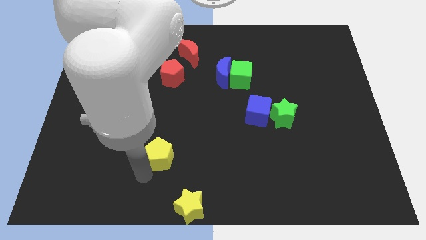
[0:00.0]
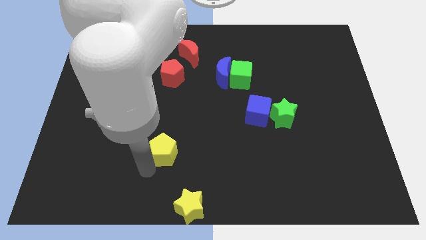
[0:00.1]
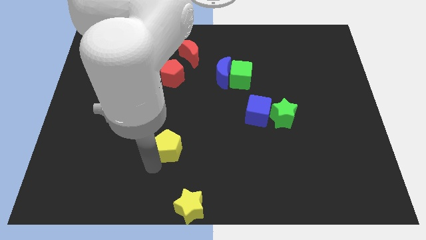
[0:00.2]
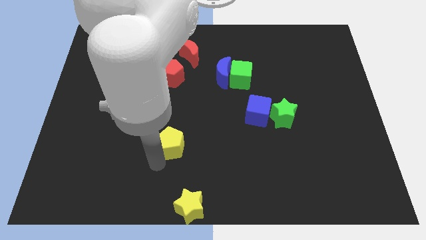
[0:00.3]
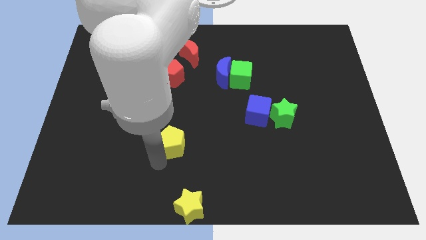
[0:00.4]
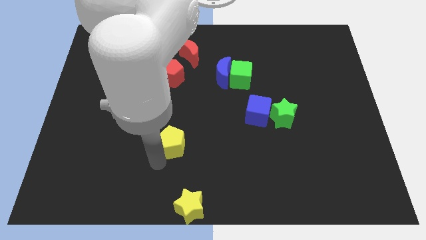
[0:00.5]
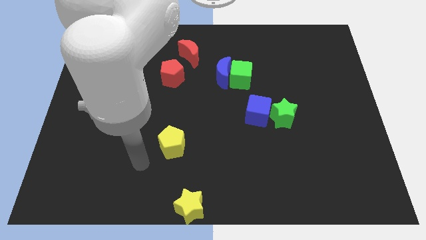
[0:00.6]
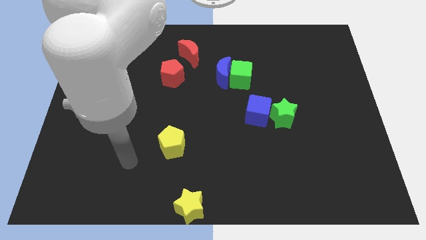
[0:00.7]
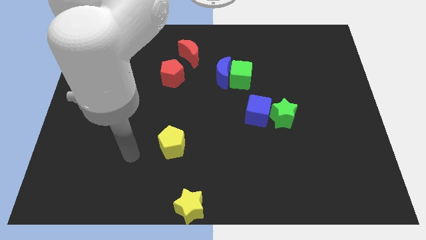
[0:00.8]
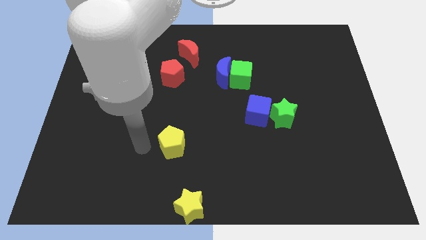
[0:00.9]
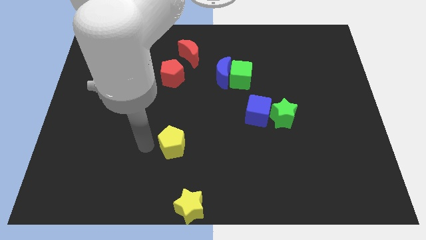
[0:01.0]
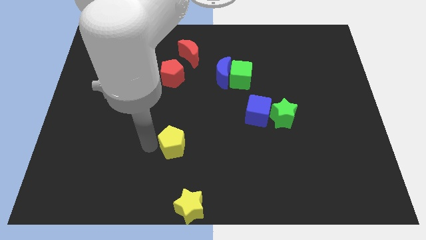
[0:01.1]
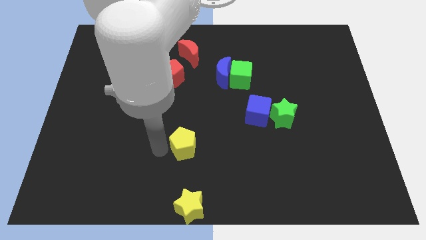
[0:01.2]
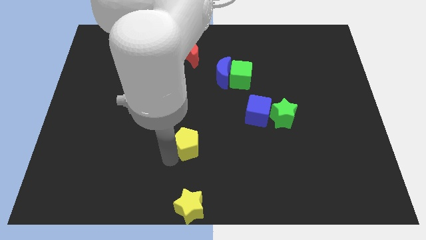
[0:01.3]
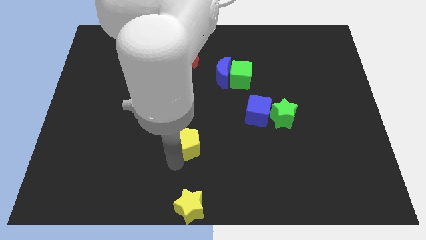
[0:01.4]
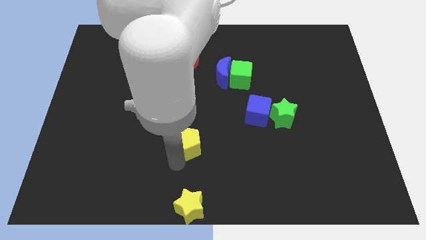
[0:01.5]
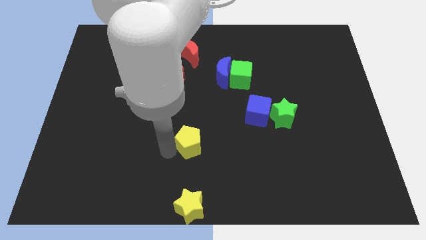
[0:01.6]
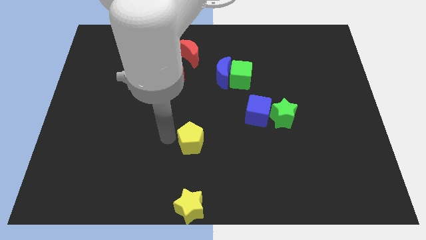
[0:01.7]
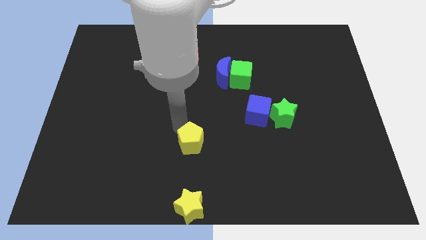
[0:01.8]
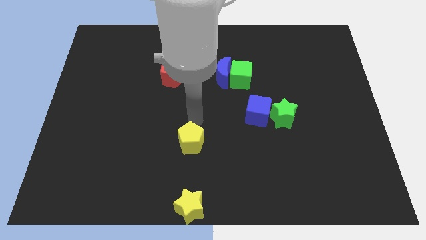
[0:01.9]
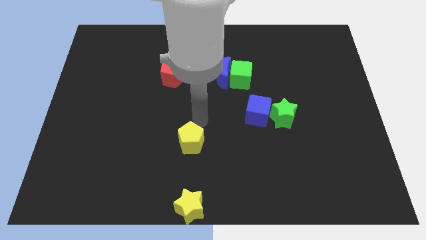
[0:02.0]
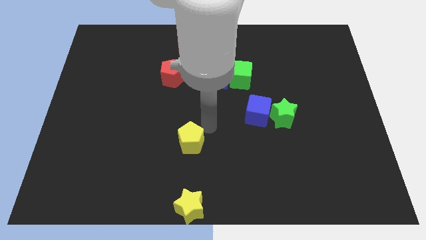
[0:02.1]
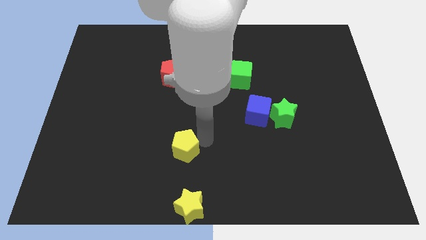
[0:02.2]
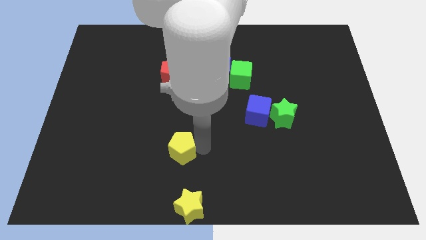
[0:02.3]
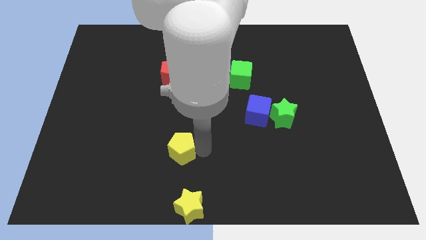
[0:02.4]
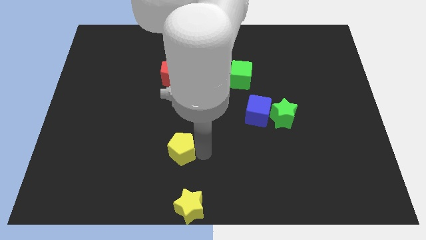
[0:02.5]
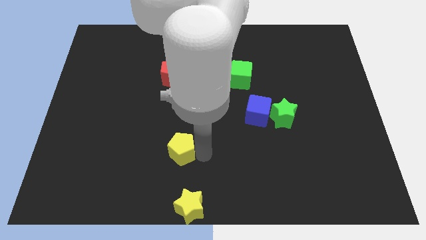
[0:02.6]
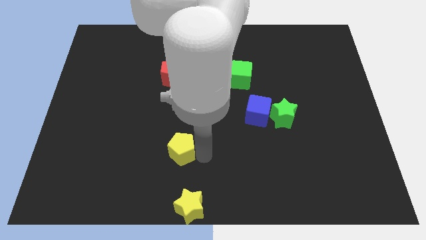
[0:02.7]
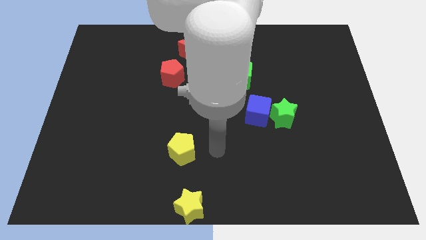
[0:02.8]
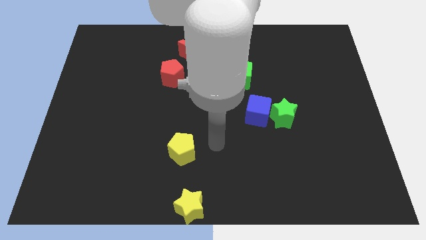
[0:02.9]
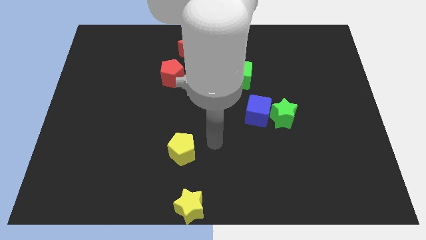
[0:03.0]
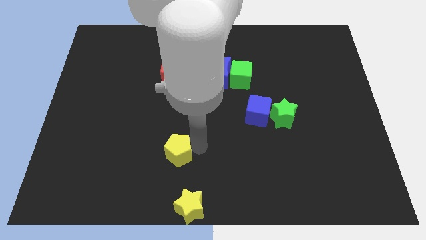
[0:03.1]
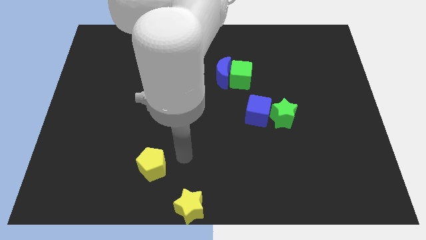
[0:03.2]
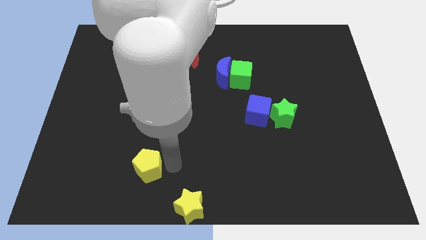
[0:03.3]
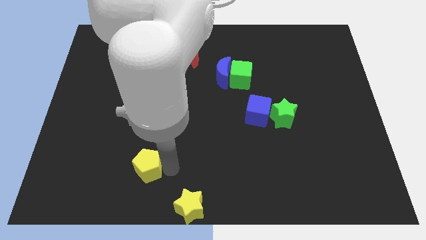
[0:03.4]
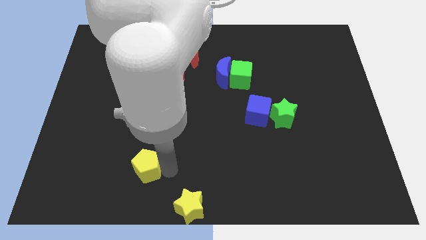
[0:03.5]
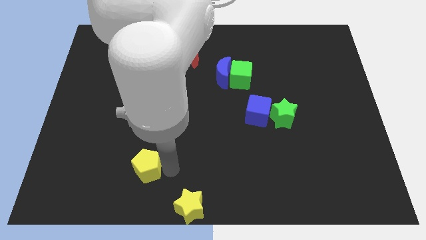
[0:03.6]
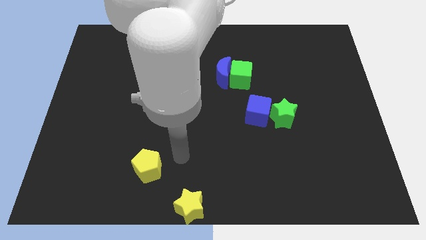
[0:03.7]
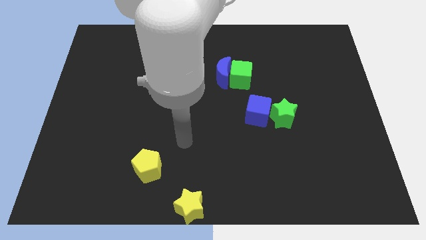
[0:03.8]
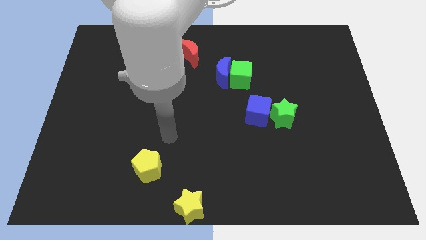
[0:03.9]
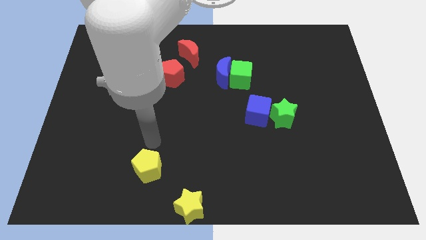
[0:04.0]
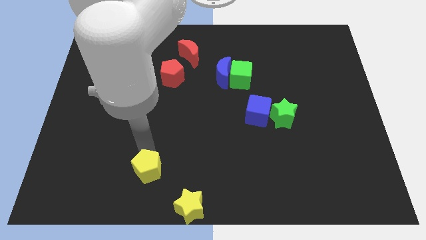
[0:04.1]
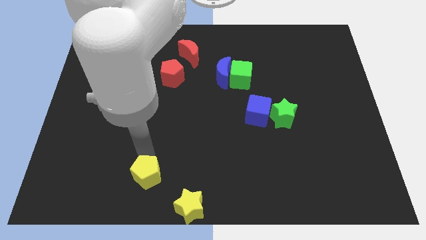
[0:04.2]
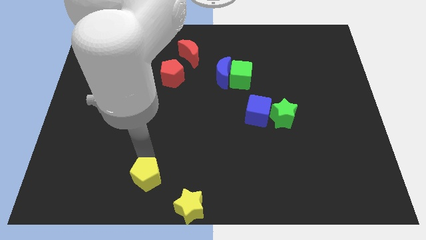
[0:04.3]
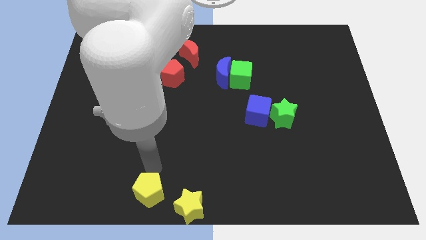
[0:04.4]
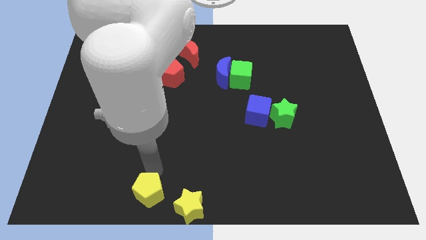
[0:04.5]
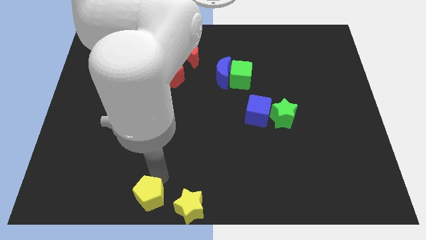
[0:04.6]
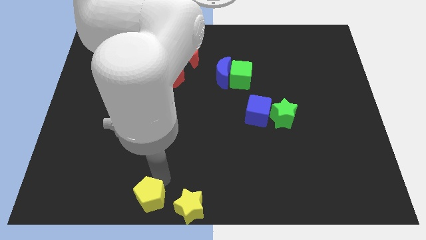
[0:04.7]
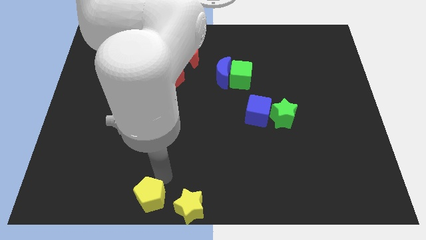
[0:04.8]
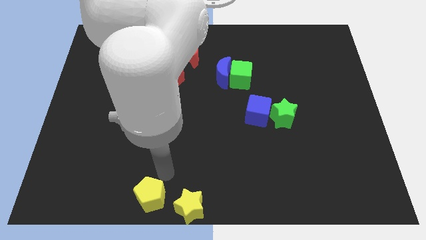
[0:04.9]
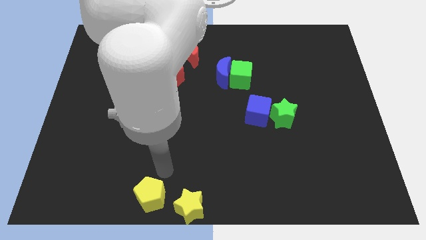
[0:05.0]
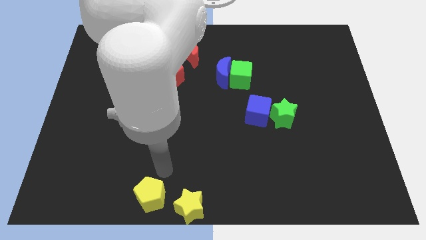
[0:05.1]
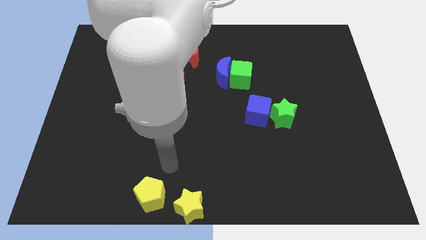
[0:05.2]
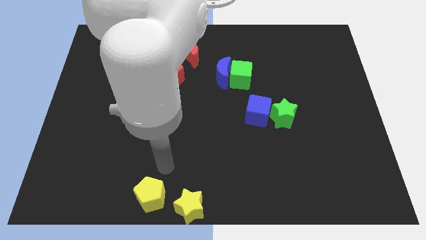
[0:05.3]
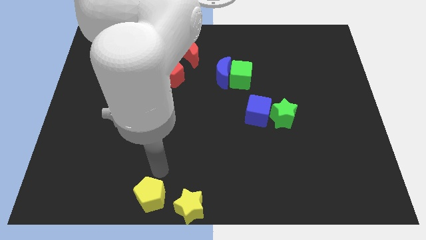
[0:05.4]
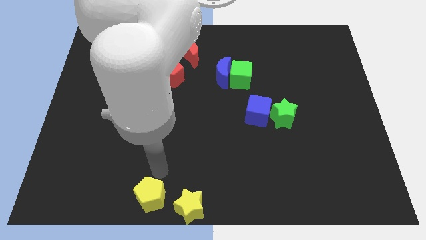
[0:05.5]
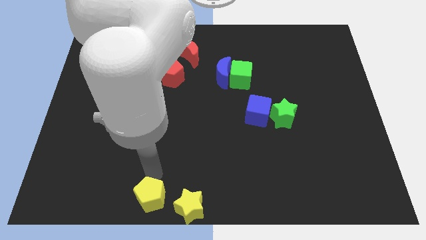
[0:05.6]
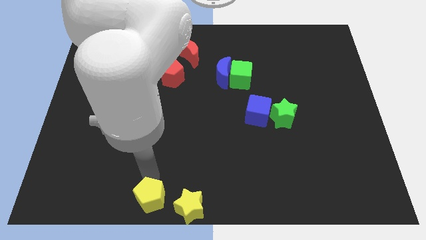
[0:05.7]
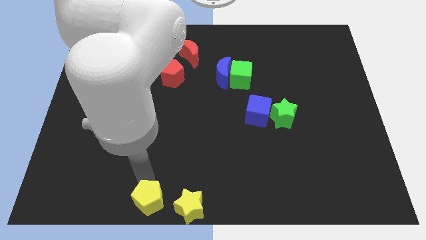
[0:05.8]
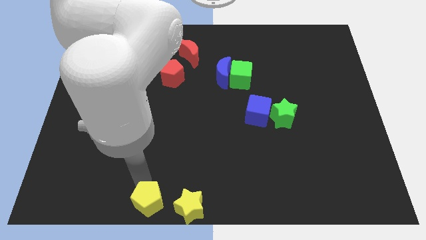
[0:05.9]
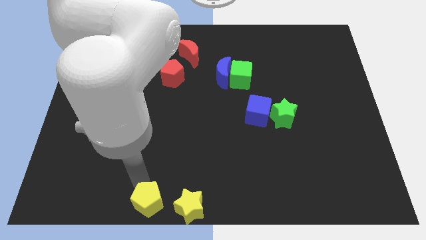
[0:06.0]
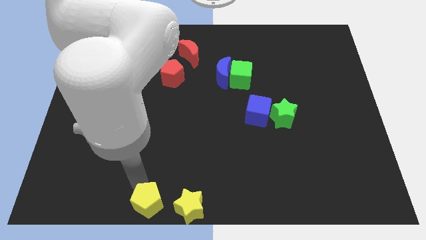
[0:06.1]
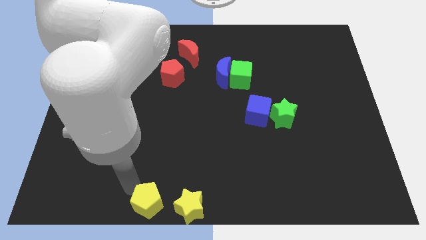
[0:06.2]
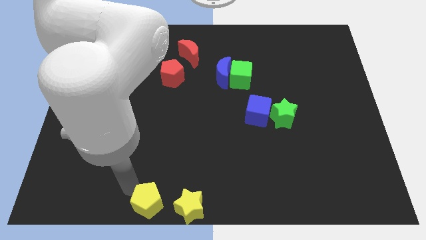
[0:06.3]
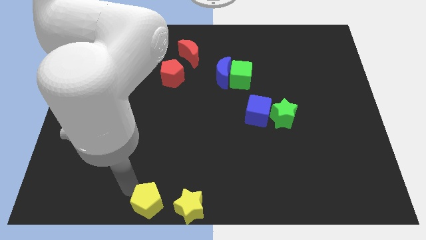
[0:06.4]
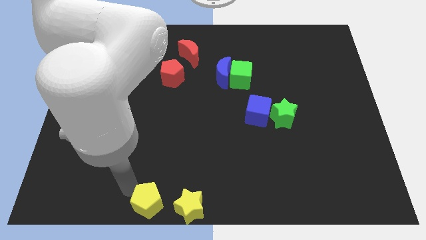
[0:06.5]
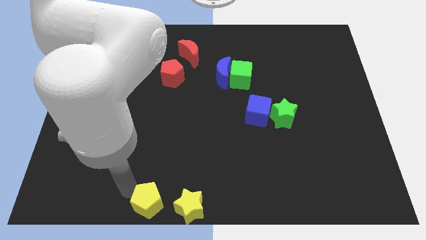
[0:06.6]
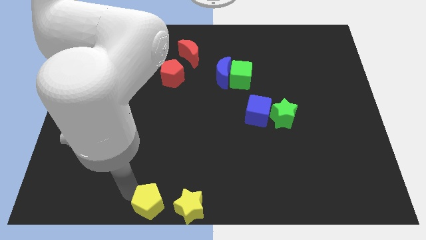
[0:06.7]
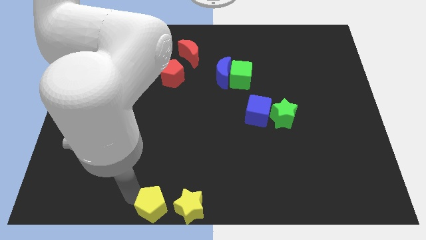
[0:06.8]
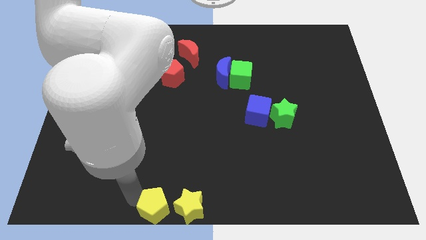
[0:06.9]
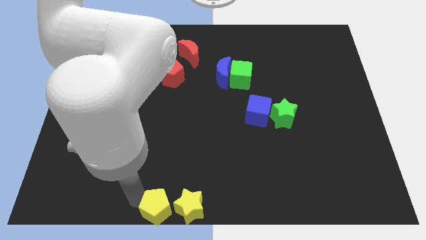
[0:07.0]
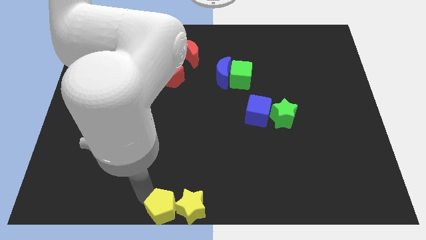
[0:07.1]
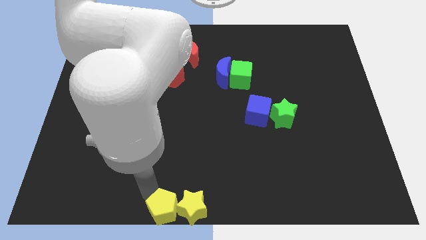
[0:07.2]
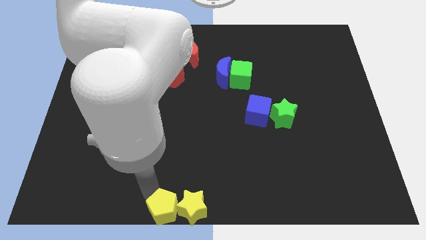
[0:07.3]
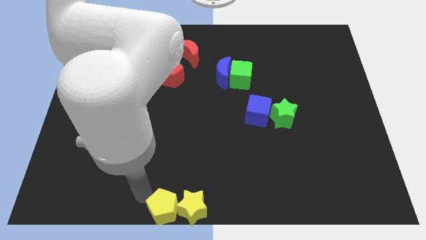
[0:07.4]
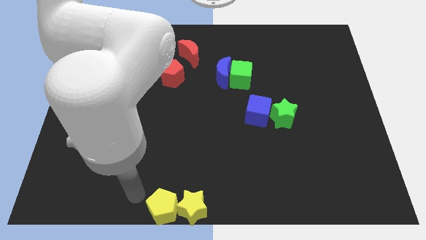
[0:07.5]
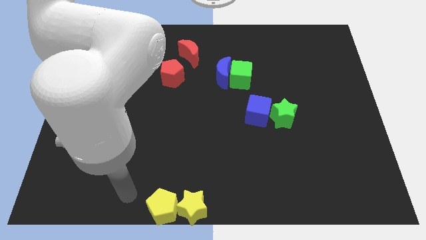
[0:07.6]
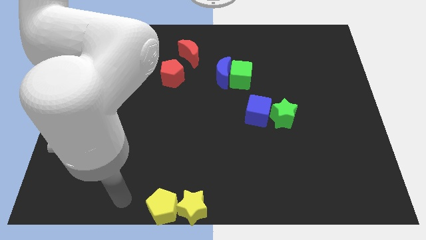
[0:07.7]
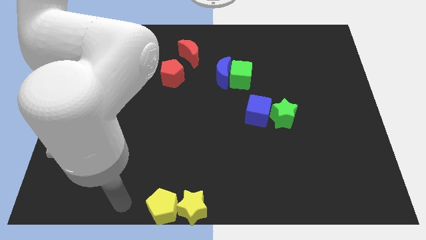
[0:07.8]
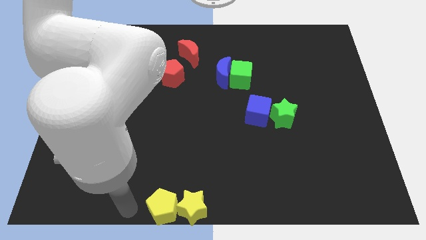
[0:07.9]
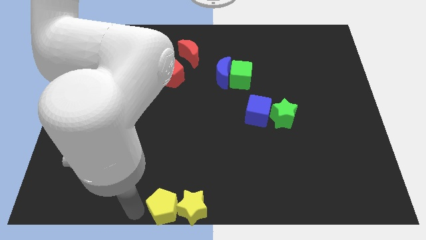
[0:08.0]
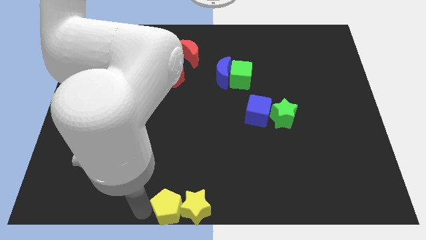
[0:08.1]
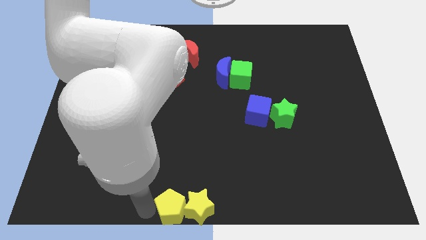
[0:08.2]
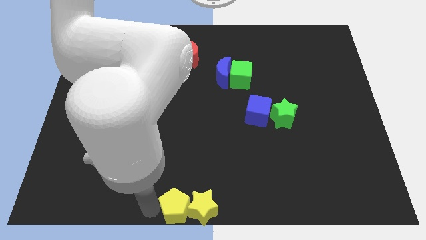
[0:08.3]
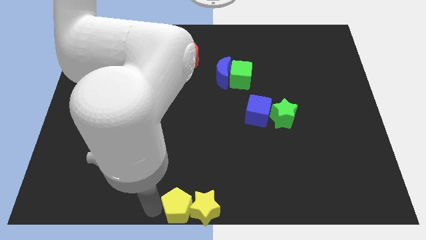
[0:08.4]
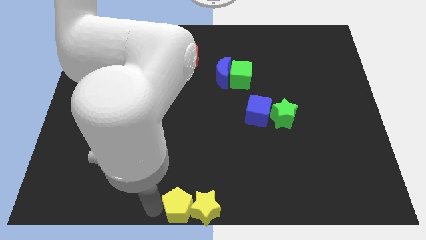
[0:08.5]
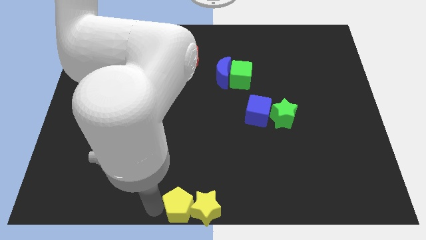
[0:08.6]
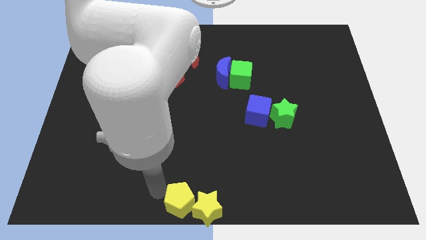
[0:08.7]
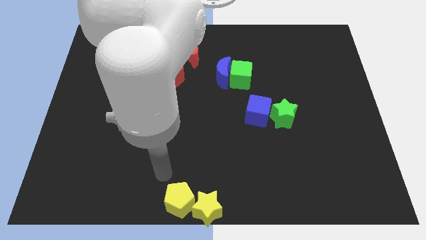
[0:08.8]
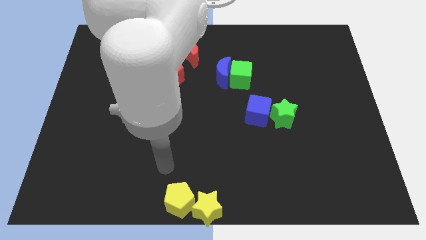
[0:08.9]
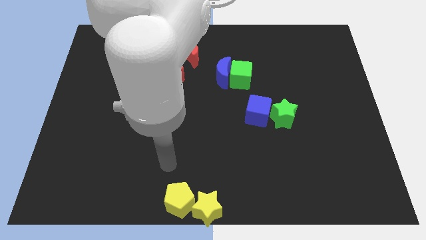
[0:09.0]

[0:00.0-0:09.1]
move the yellow pentagon into the yellow star
